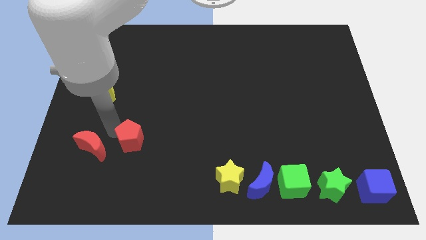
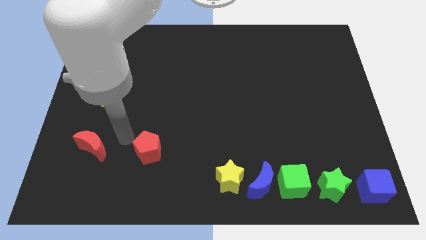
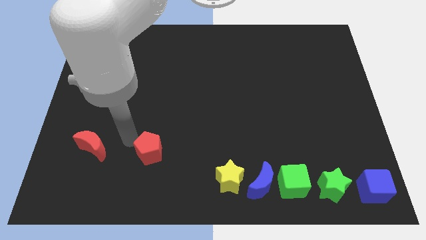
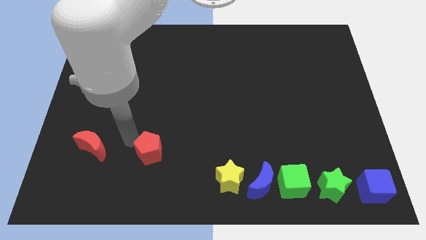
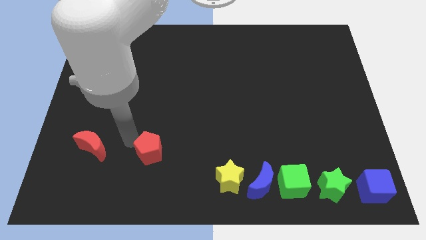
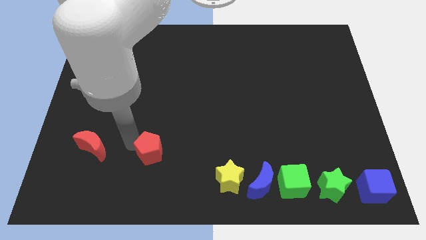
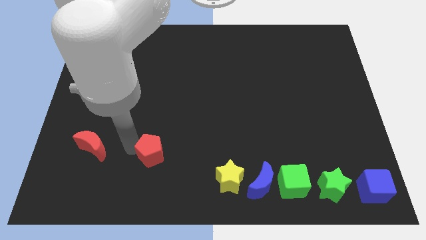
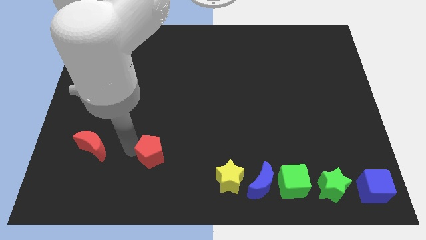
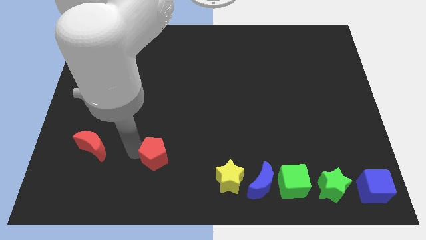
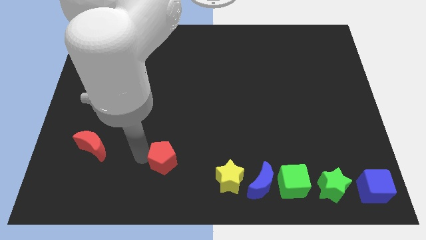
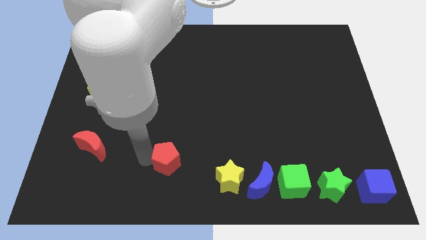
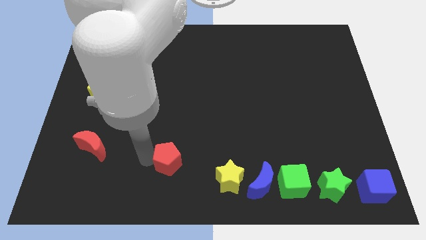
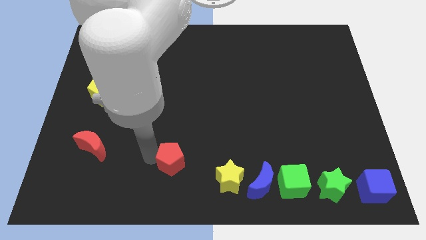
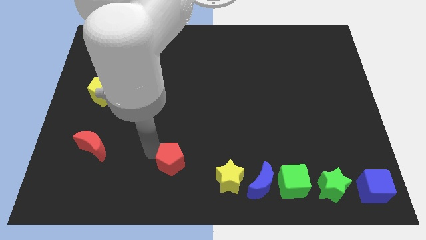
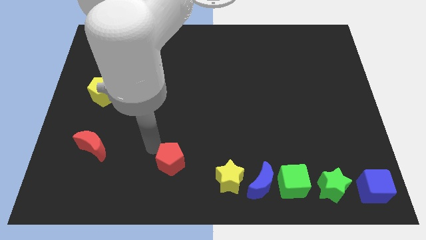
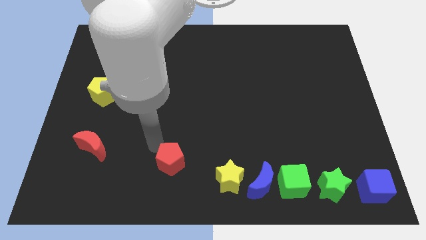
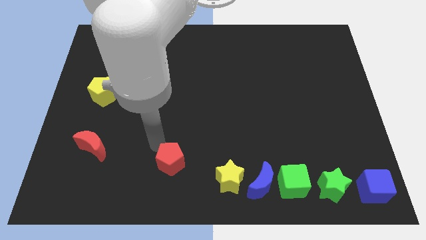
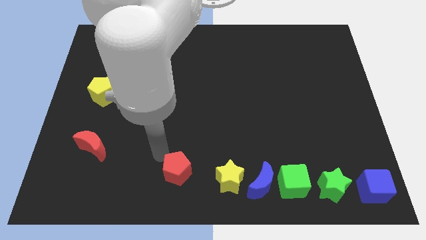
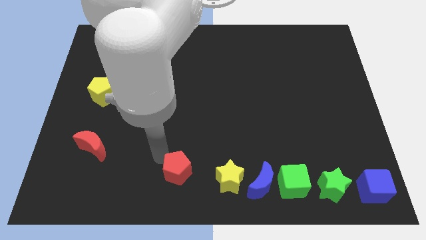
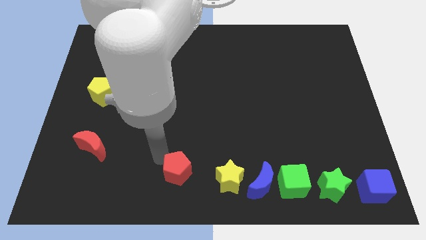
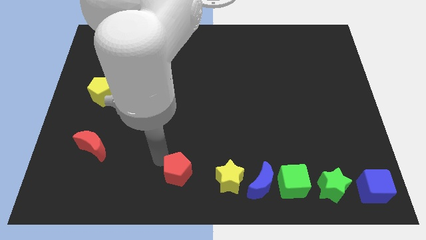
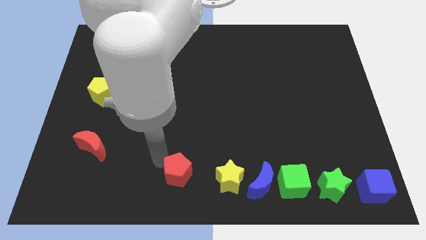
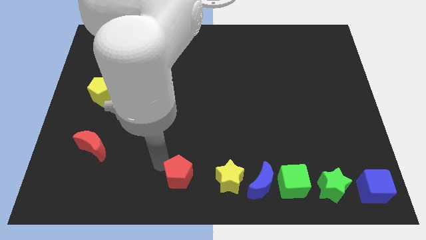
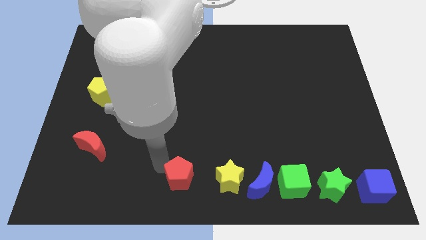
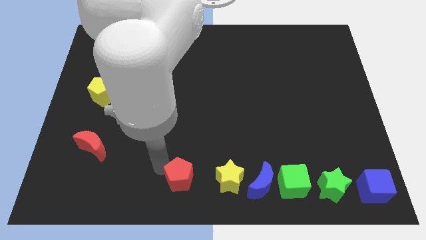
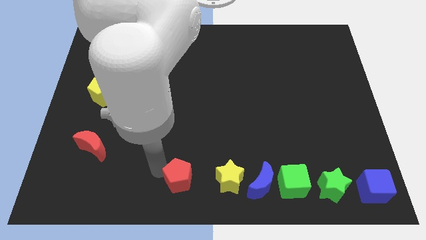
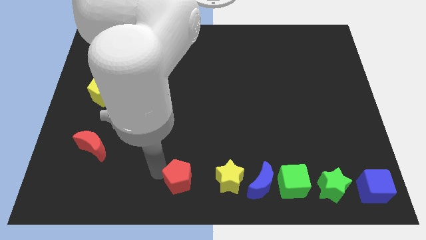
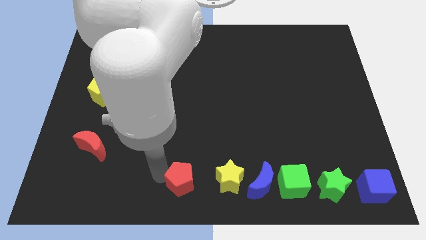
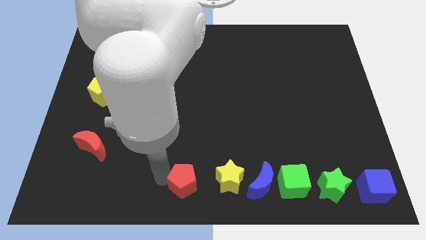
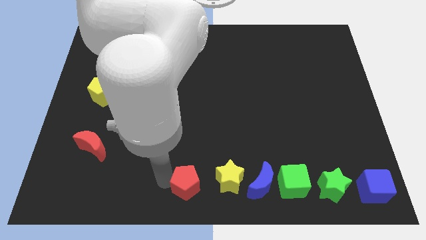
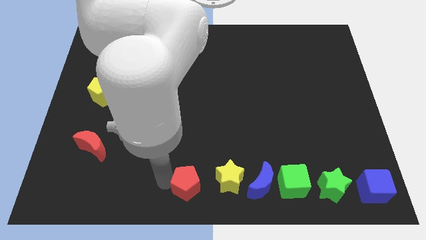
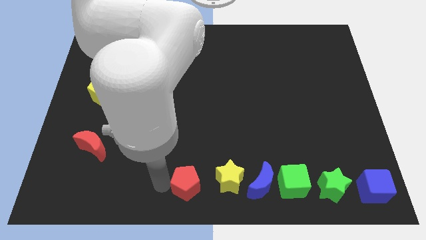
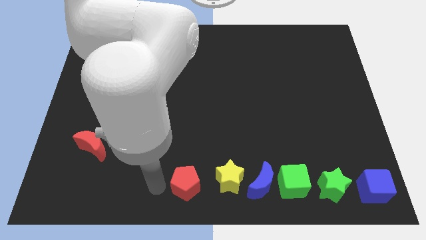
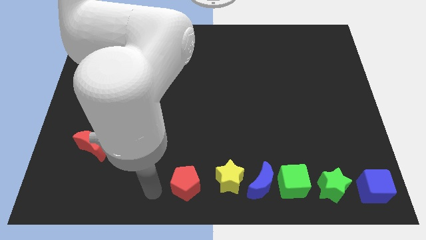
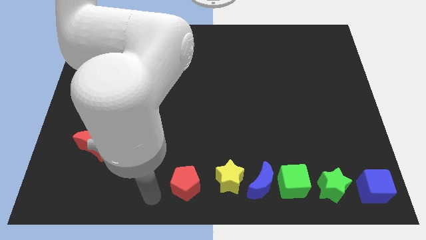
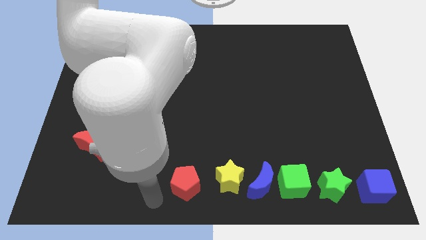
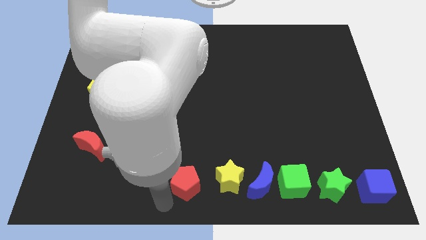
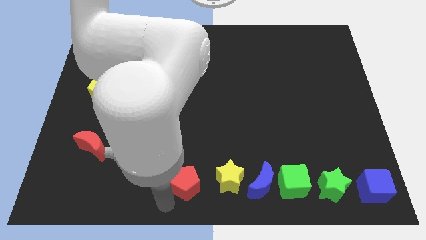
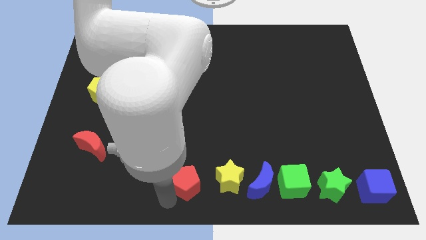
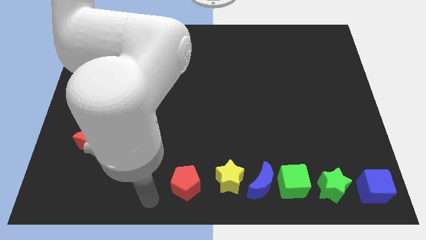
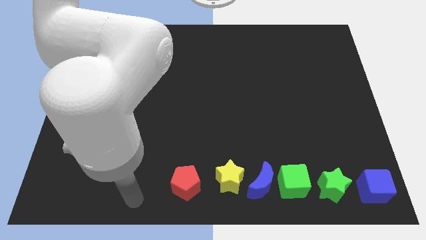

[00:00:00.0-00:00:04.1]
move red pentagon to the left of yellow star

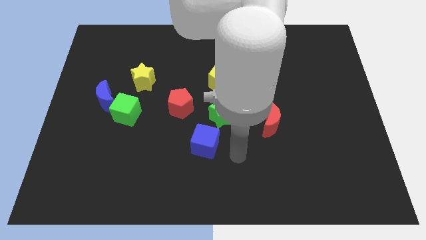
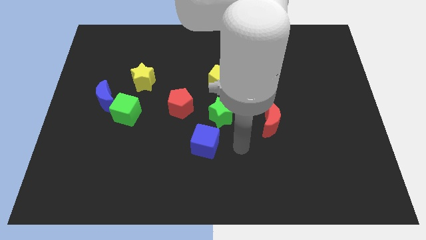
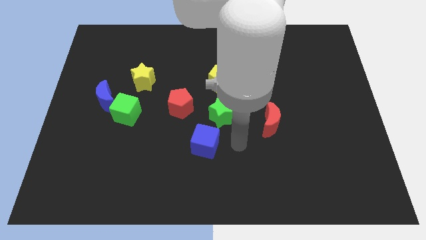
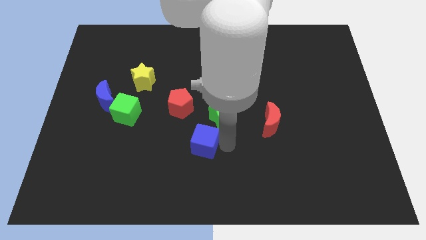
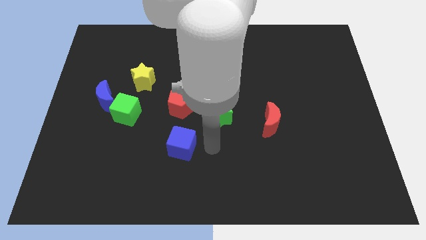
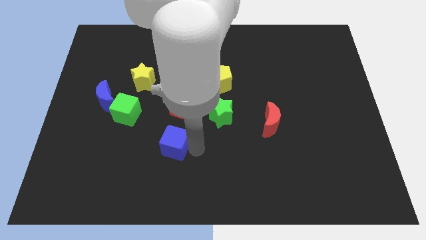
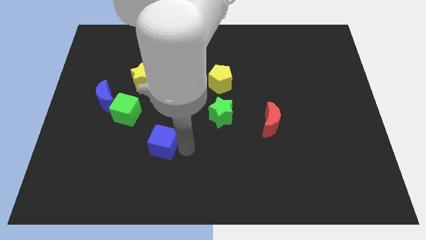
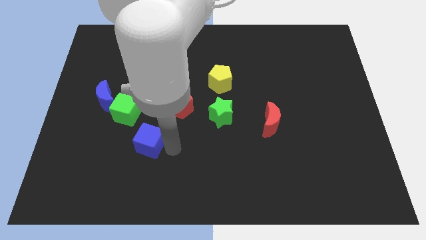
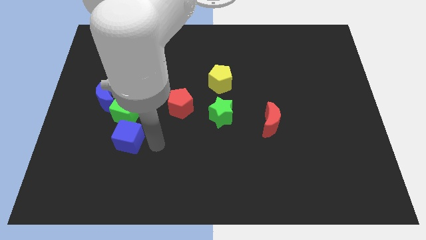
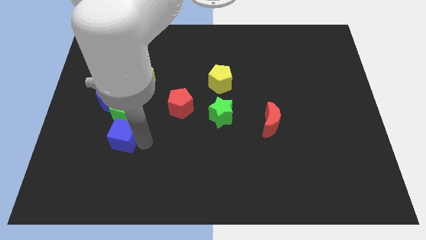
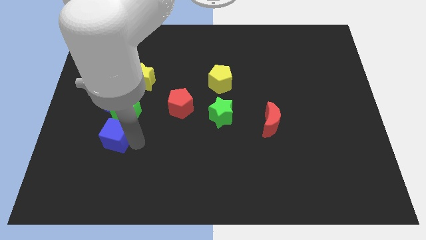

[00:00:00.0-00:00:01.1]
move the blue cube to the bottom of green cube

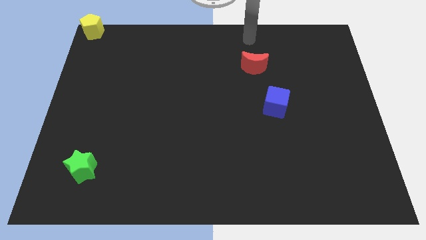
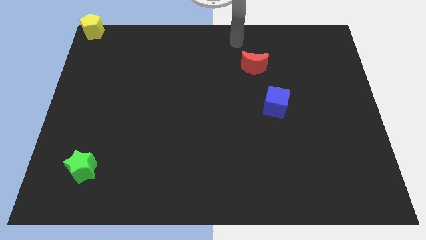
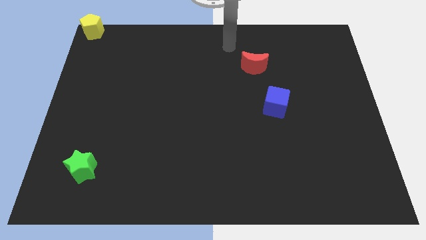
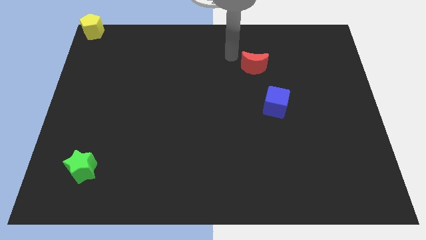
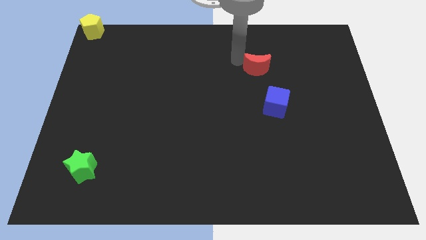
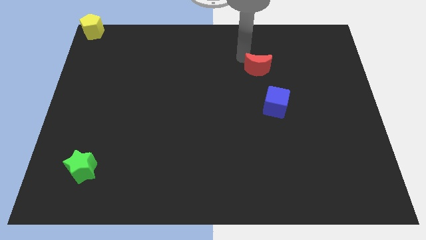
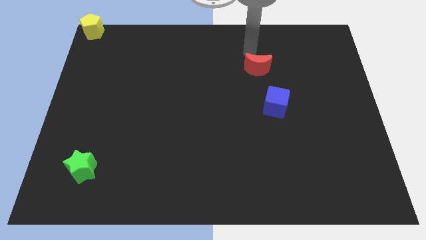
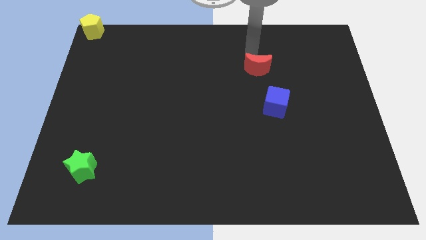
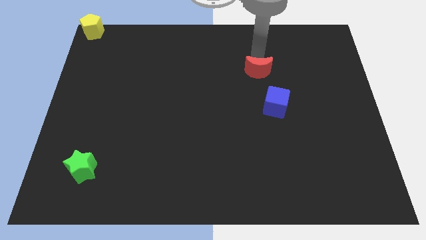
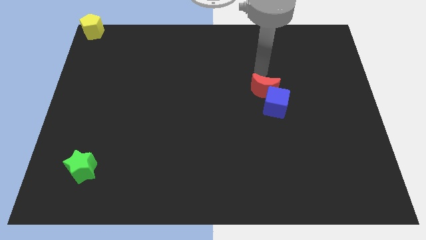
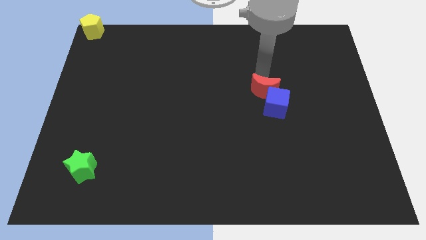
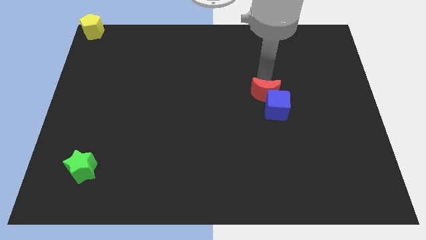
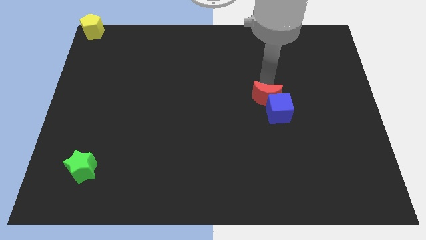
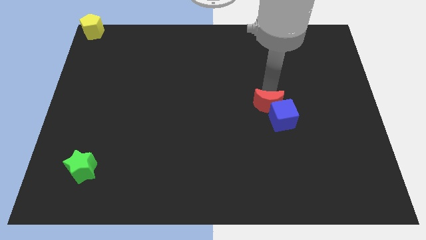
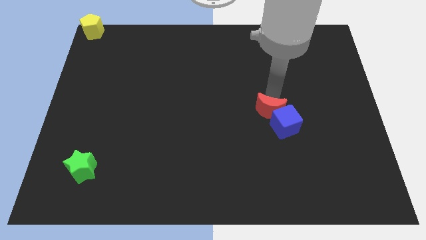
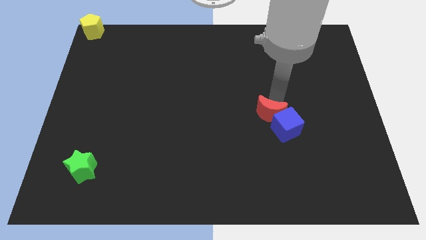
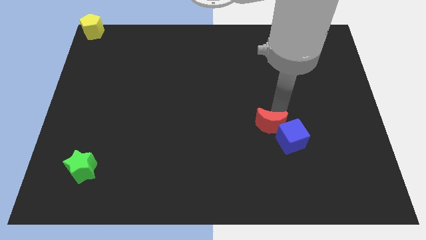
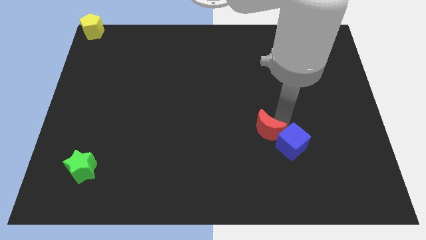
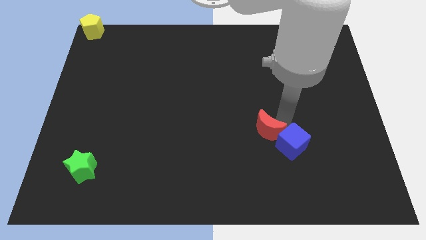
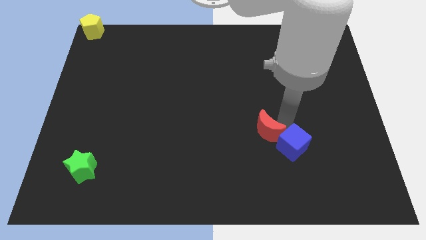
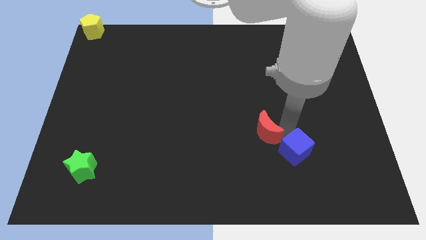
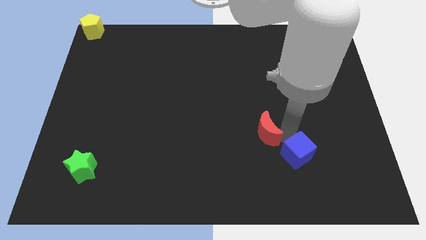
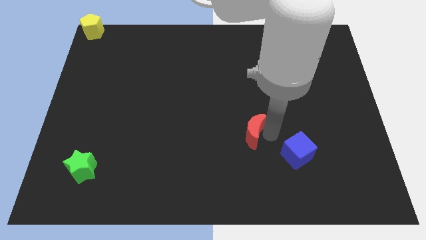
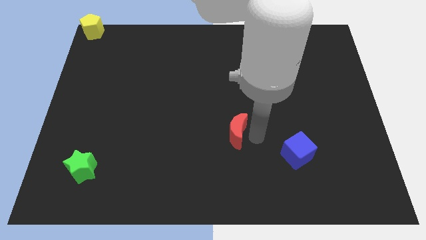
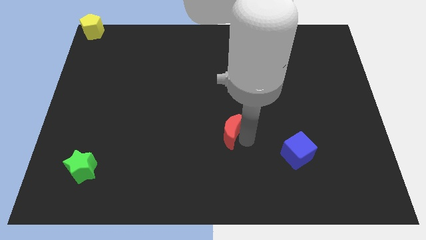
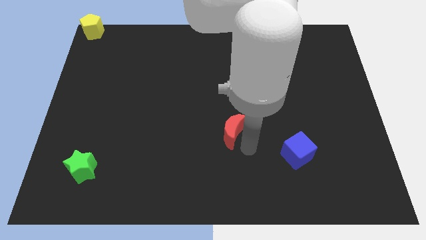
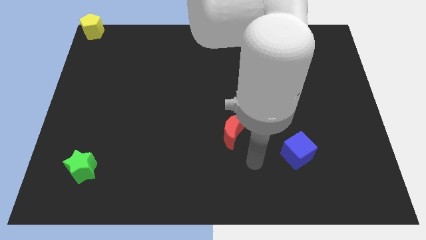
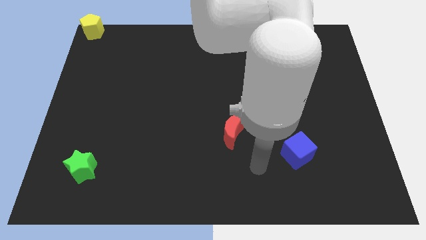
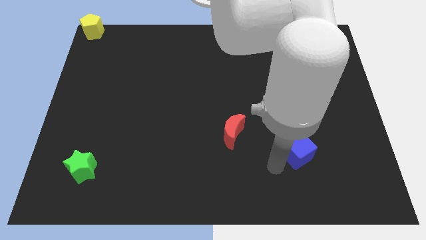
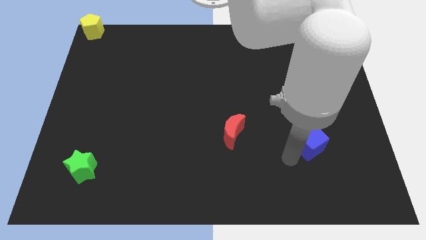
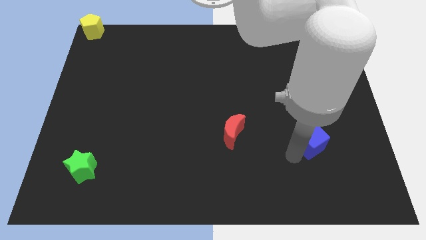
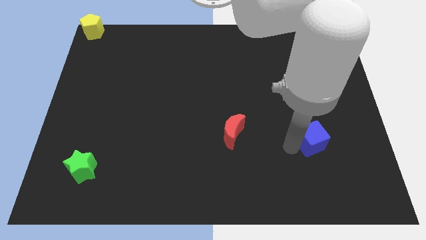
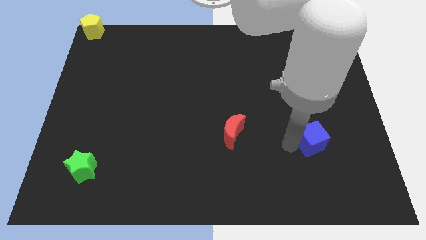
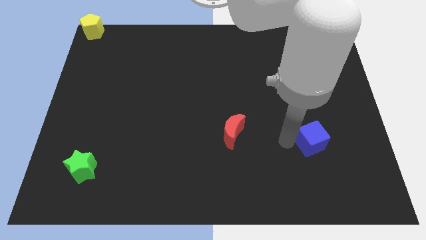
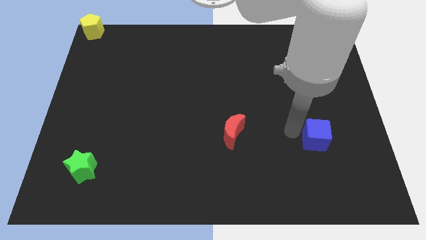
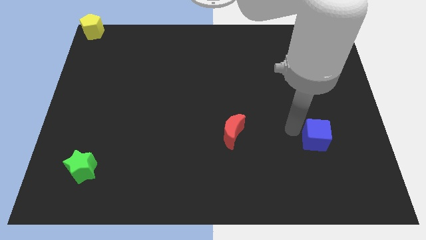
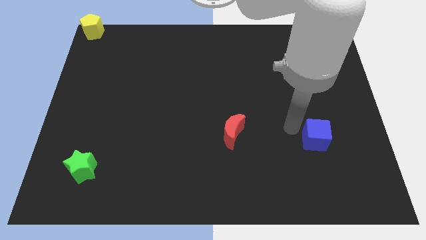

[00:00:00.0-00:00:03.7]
push the blue cube and red moon slightly downwards
